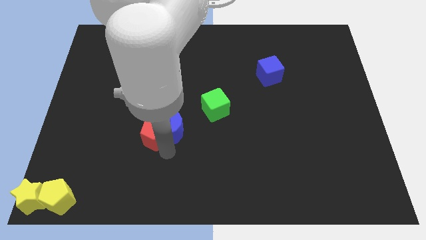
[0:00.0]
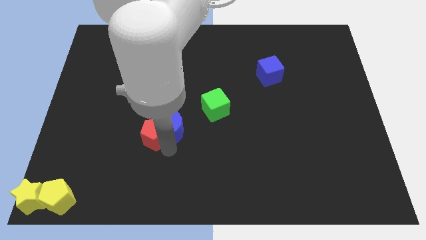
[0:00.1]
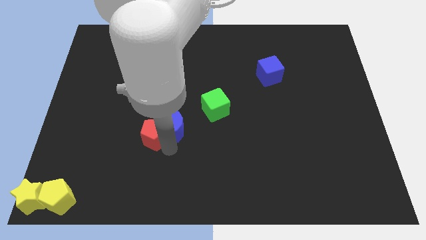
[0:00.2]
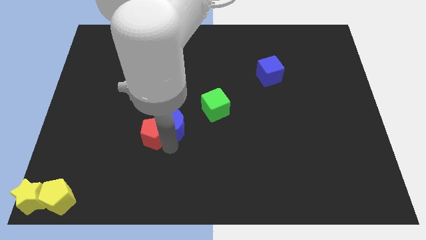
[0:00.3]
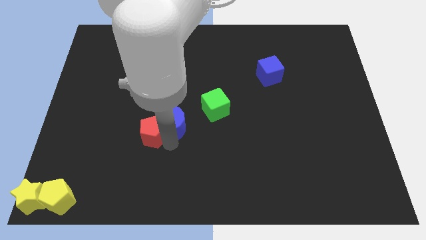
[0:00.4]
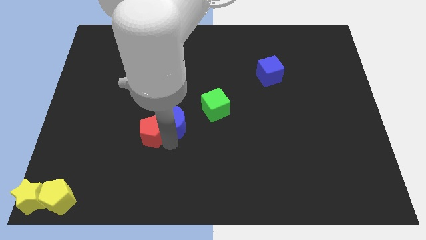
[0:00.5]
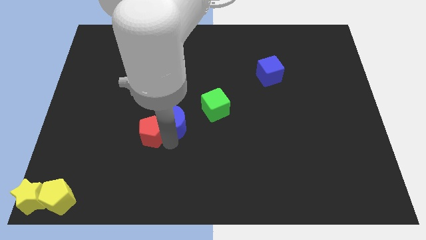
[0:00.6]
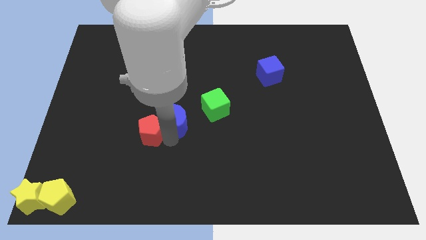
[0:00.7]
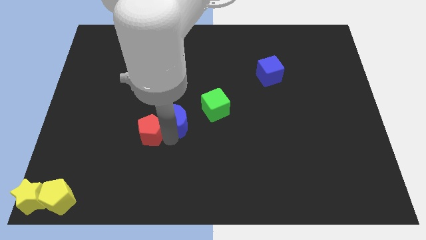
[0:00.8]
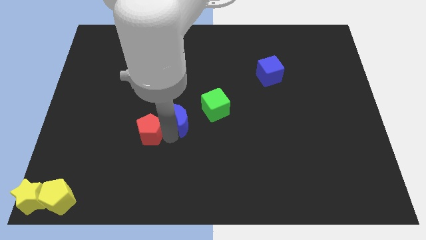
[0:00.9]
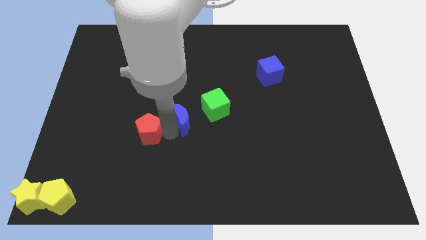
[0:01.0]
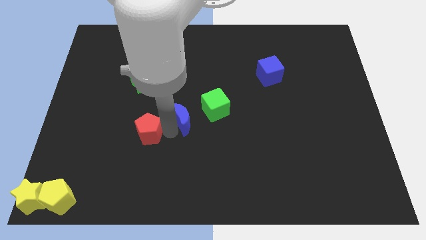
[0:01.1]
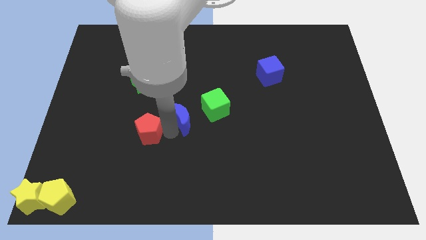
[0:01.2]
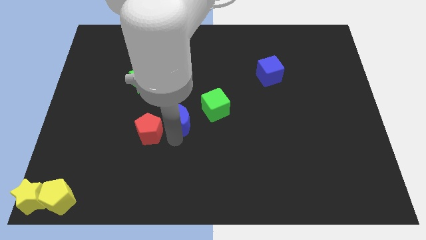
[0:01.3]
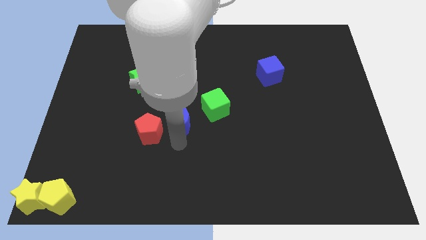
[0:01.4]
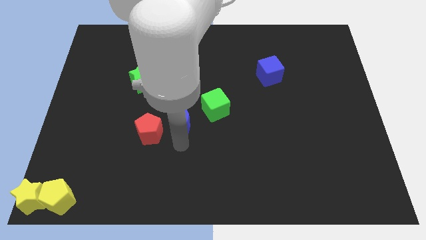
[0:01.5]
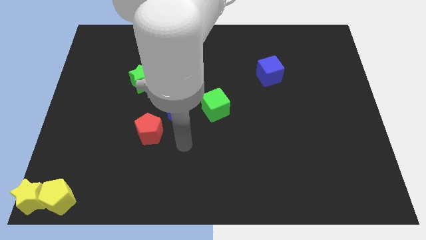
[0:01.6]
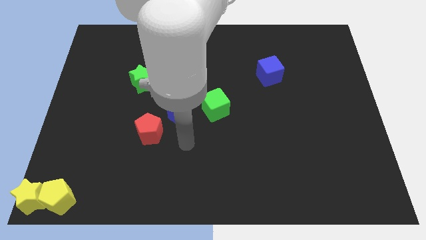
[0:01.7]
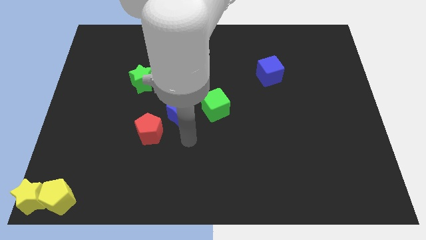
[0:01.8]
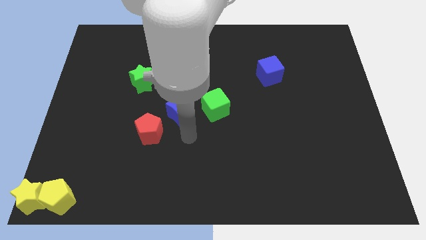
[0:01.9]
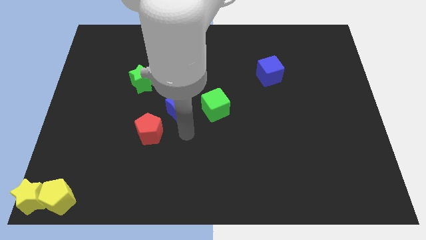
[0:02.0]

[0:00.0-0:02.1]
separate red pentagon and the blue moon

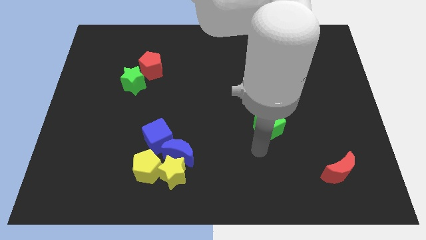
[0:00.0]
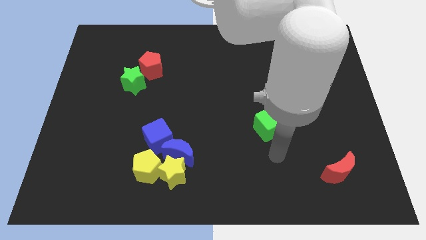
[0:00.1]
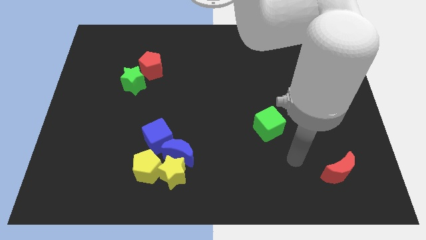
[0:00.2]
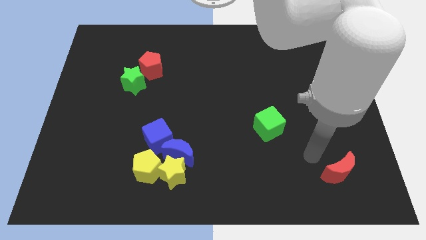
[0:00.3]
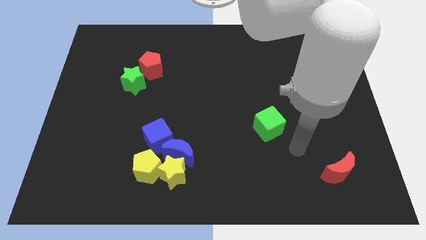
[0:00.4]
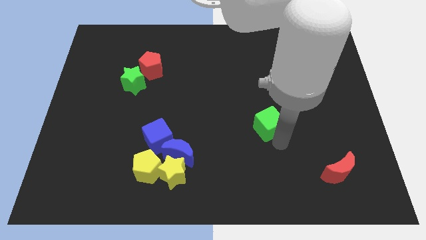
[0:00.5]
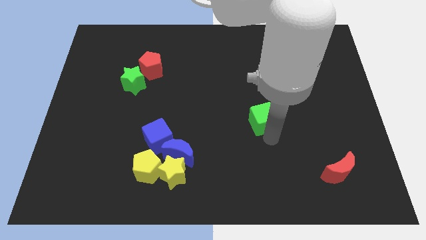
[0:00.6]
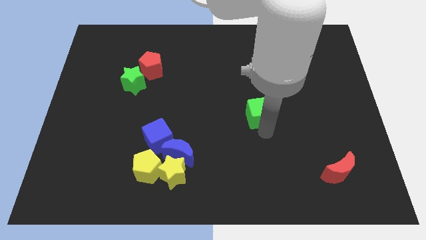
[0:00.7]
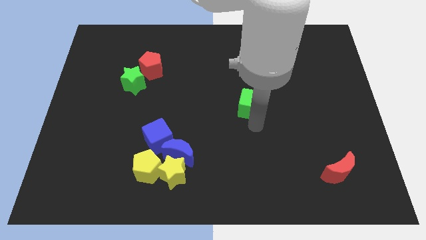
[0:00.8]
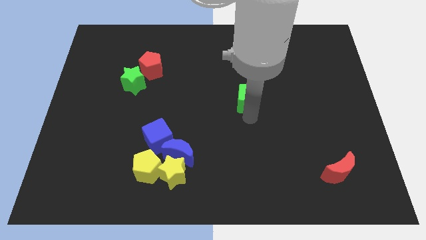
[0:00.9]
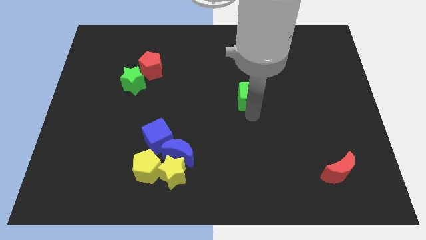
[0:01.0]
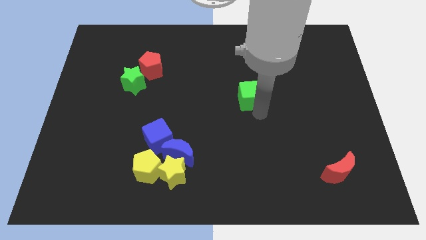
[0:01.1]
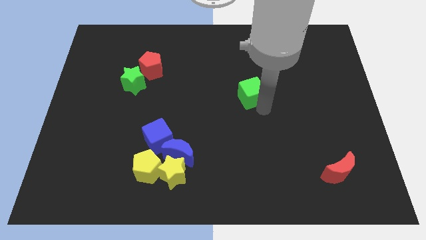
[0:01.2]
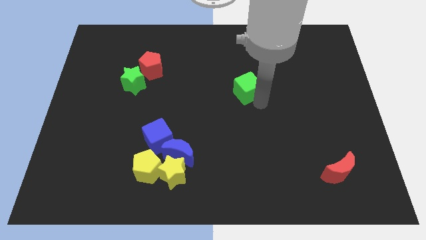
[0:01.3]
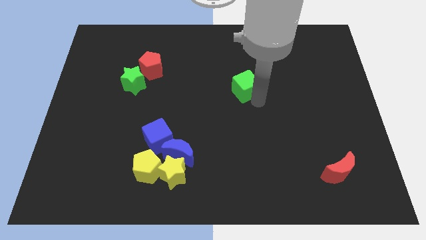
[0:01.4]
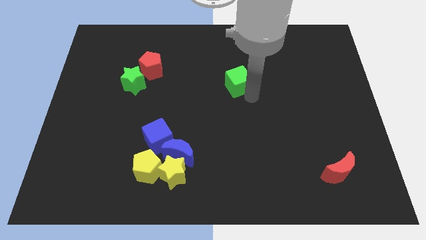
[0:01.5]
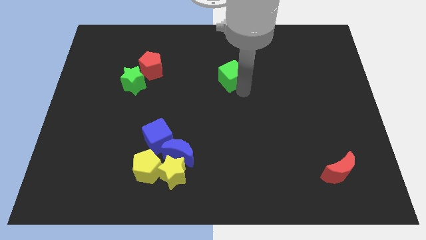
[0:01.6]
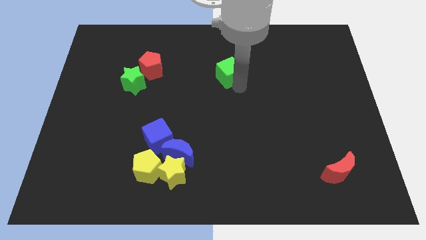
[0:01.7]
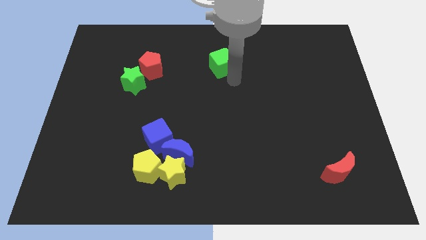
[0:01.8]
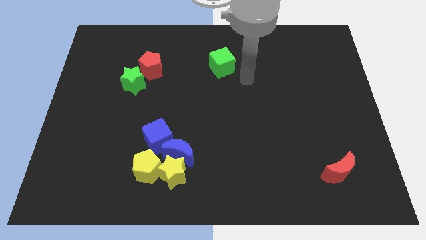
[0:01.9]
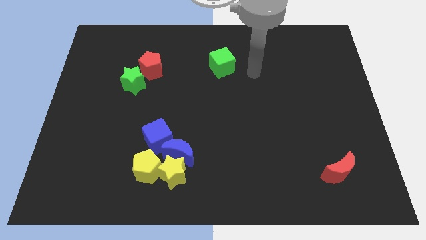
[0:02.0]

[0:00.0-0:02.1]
move the green cube to the right of the red pentagon

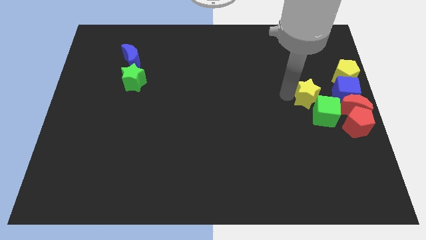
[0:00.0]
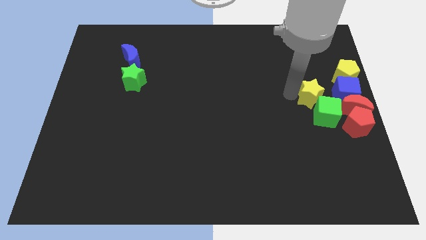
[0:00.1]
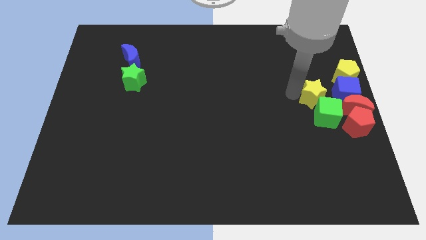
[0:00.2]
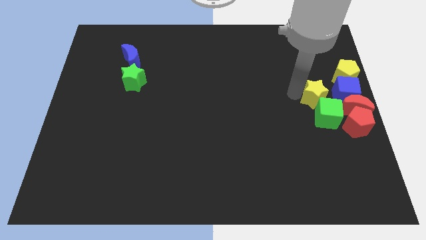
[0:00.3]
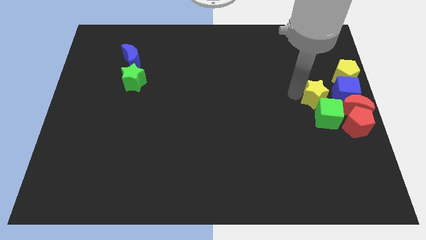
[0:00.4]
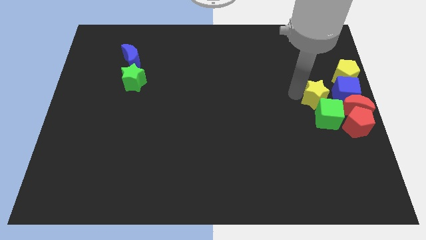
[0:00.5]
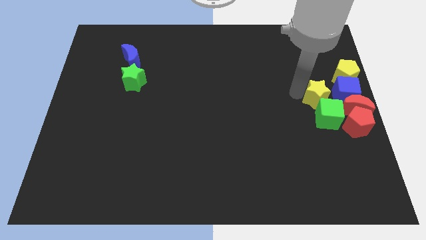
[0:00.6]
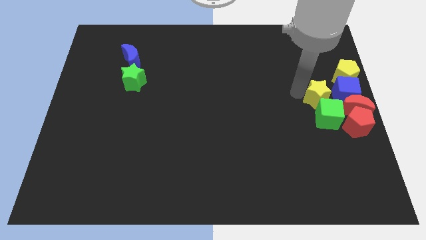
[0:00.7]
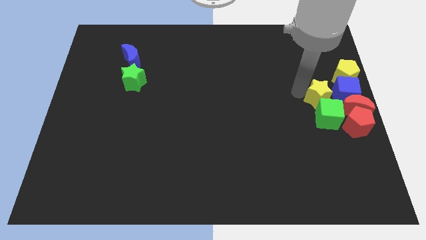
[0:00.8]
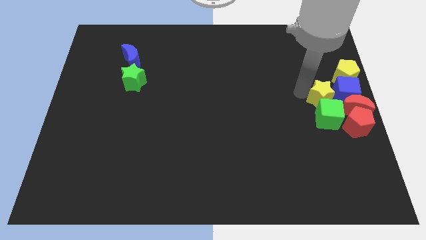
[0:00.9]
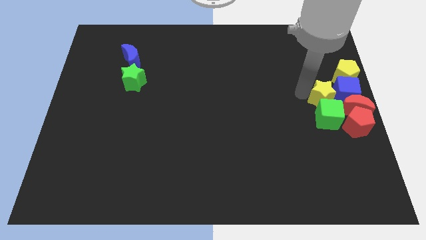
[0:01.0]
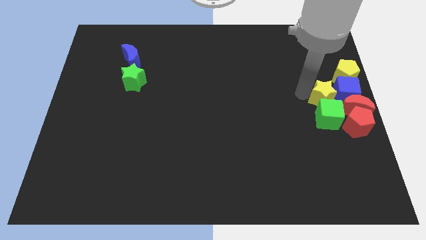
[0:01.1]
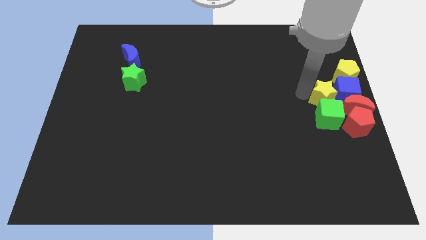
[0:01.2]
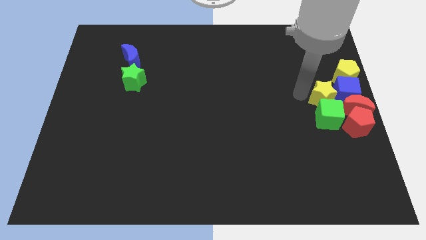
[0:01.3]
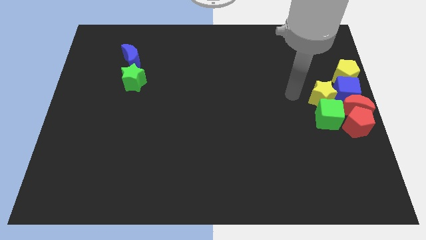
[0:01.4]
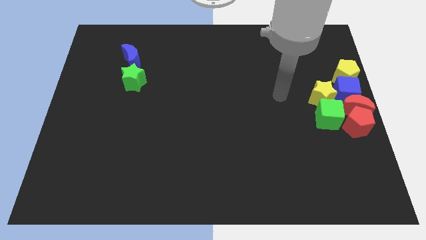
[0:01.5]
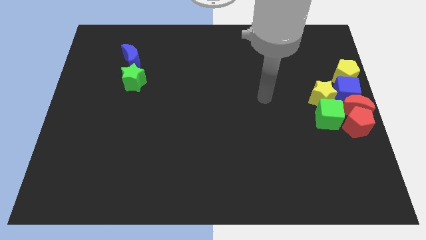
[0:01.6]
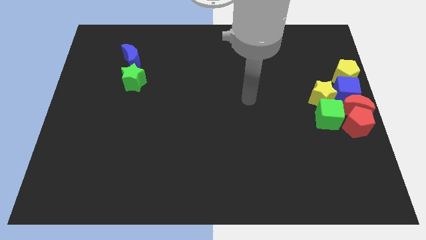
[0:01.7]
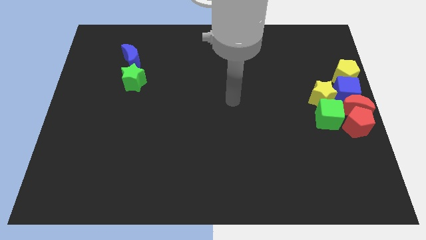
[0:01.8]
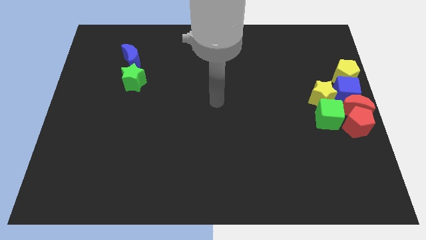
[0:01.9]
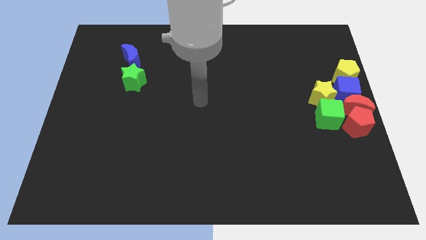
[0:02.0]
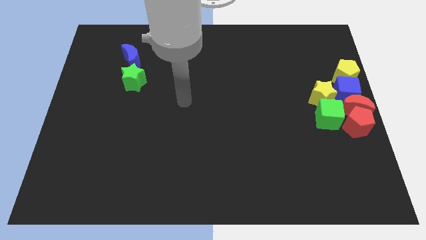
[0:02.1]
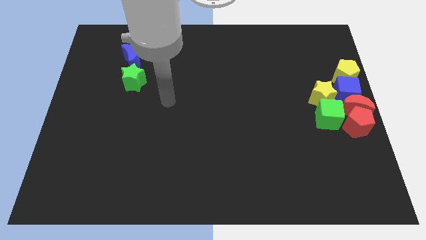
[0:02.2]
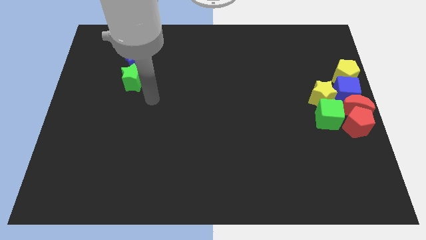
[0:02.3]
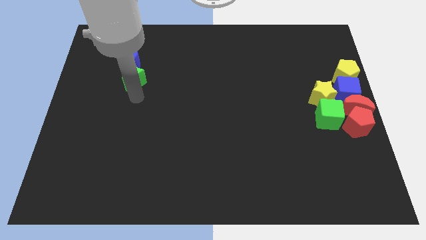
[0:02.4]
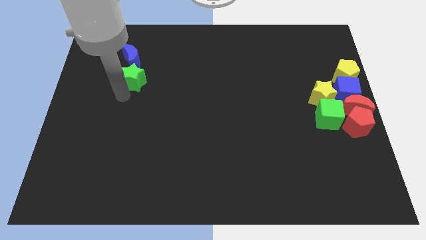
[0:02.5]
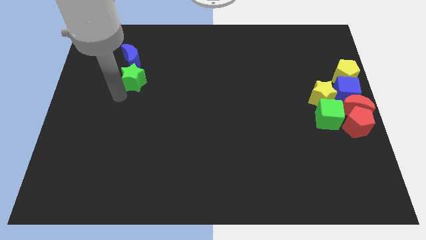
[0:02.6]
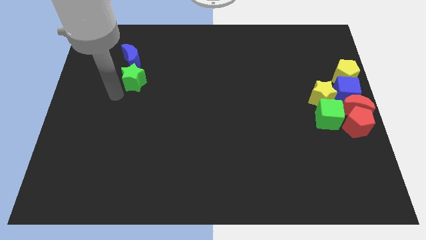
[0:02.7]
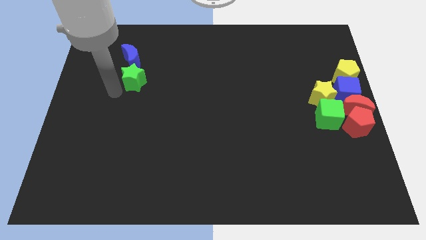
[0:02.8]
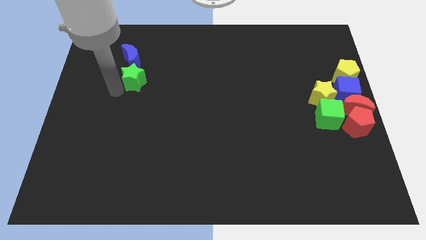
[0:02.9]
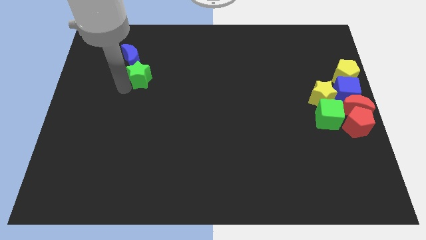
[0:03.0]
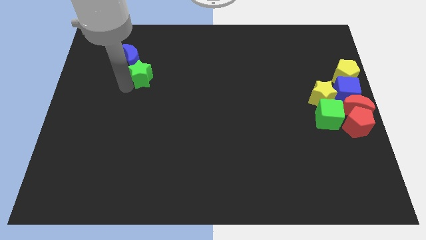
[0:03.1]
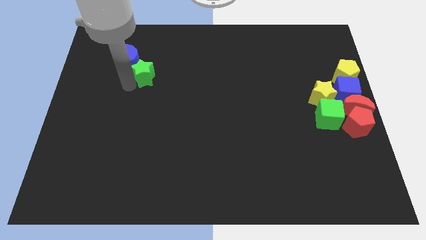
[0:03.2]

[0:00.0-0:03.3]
place the yellow star on top of the green cube

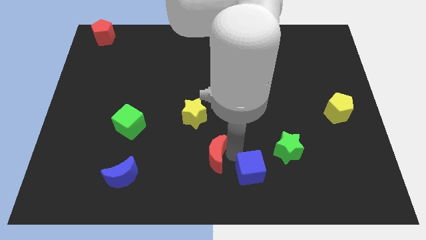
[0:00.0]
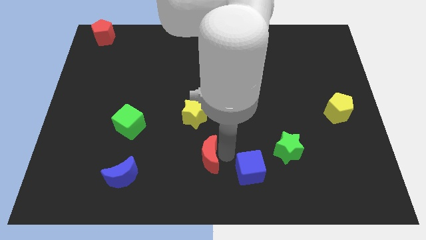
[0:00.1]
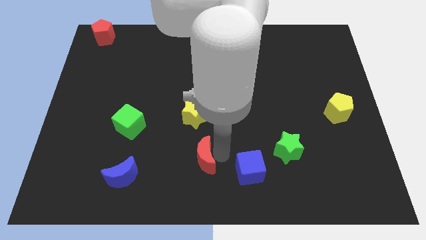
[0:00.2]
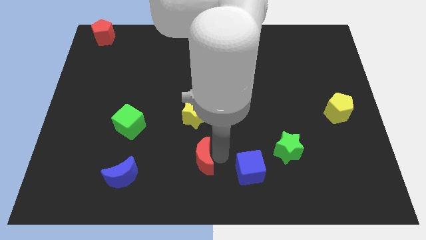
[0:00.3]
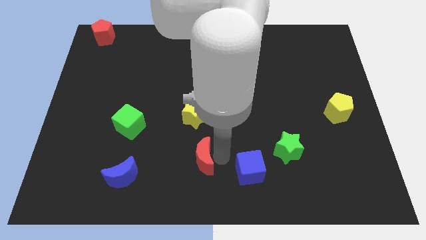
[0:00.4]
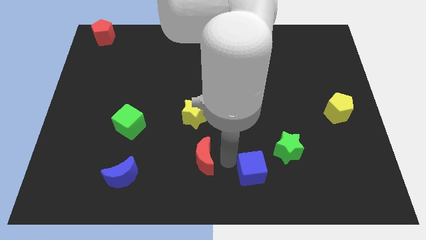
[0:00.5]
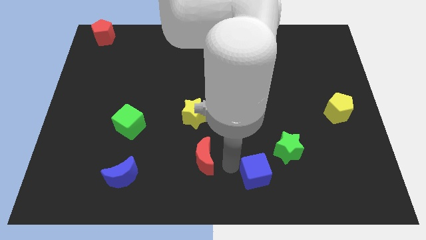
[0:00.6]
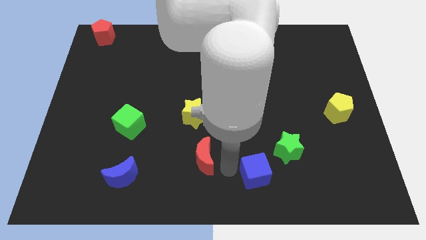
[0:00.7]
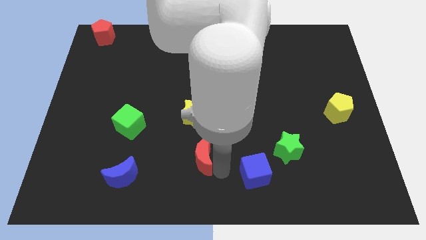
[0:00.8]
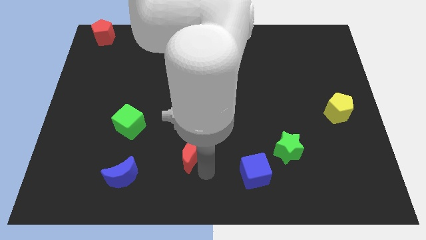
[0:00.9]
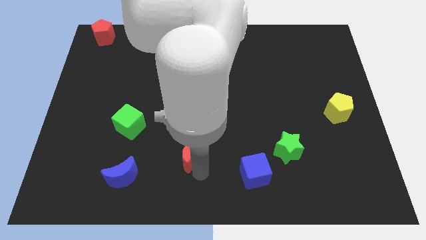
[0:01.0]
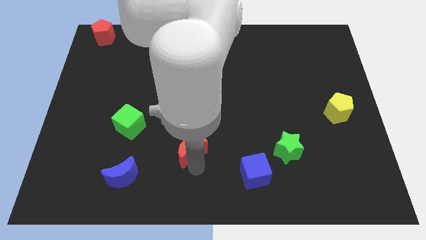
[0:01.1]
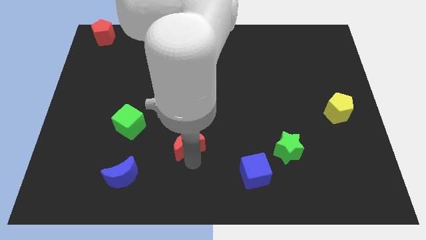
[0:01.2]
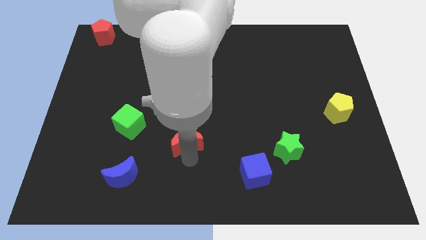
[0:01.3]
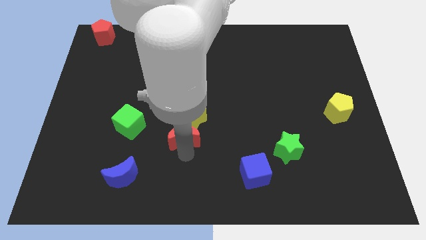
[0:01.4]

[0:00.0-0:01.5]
place red crescent below yellow star

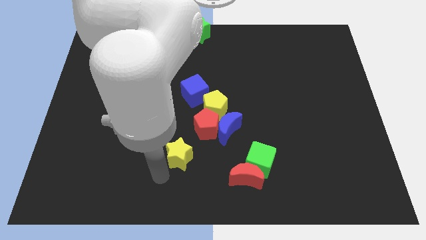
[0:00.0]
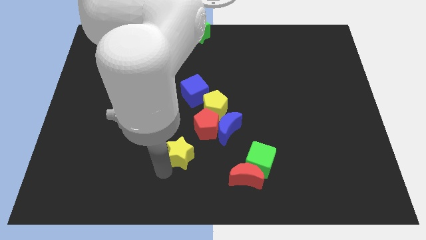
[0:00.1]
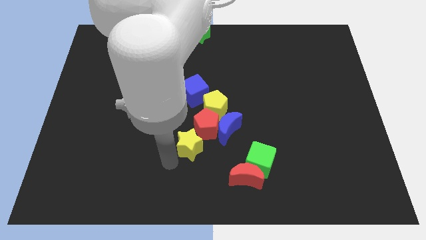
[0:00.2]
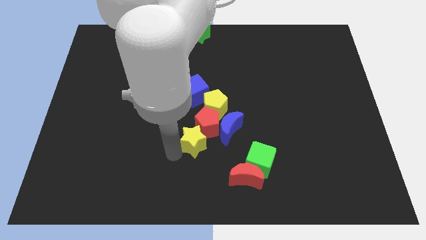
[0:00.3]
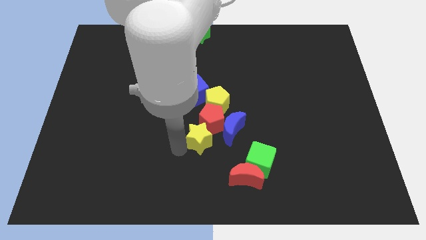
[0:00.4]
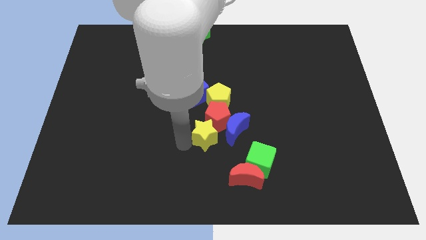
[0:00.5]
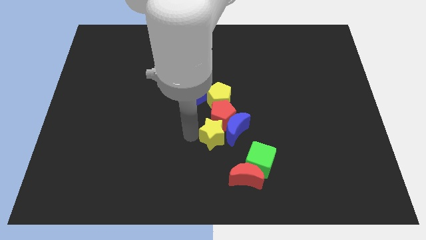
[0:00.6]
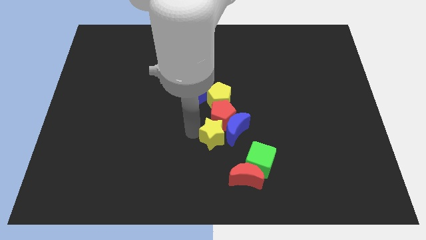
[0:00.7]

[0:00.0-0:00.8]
move the yellow star to the left of the blue crescent
